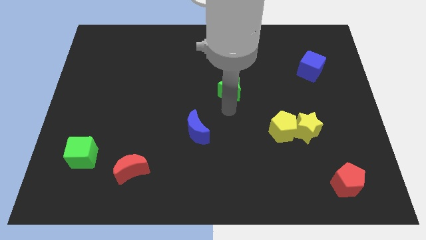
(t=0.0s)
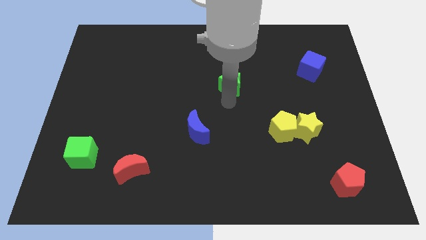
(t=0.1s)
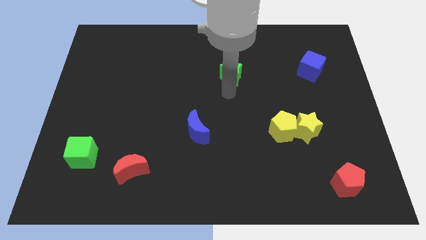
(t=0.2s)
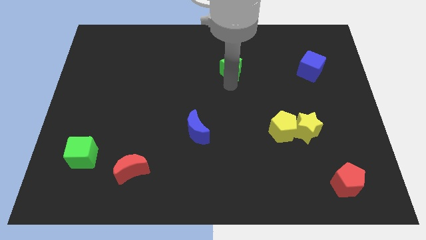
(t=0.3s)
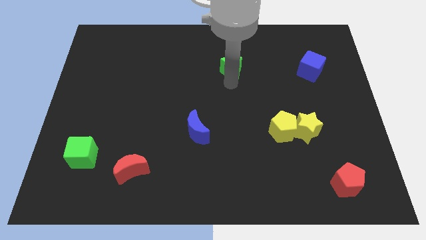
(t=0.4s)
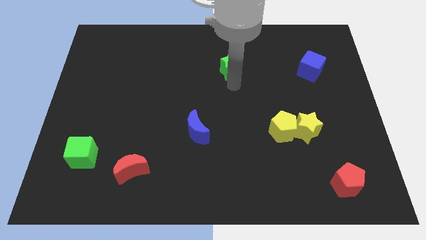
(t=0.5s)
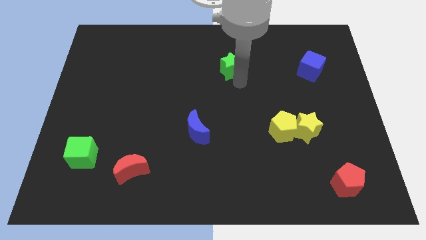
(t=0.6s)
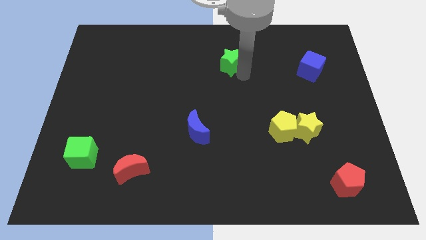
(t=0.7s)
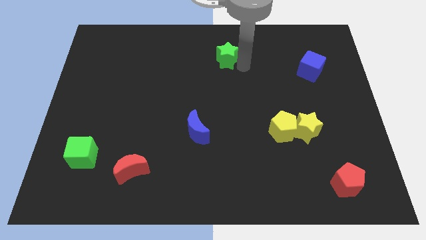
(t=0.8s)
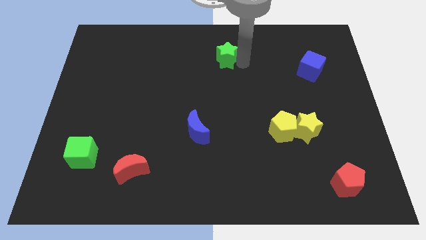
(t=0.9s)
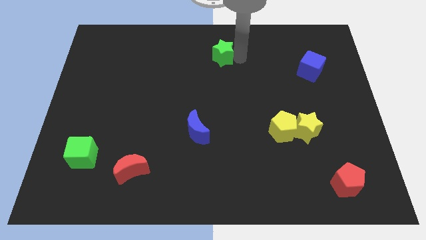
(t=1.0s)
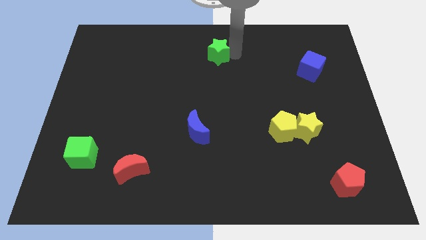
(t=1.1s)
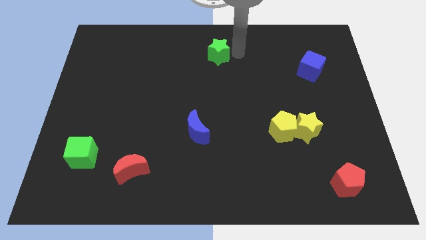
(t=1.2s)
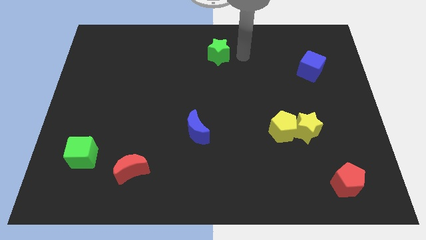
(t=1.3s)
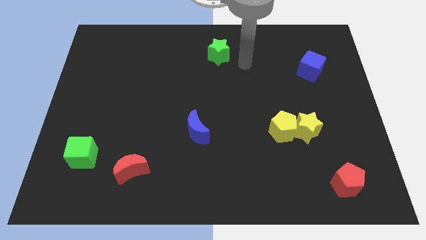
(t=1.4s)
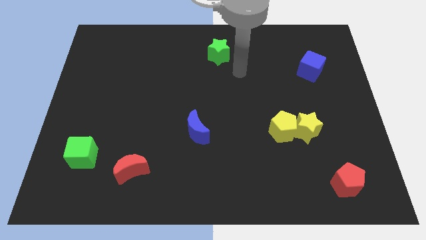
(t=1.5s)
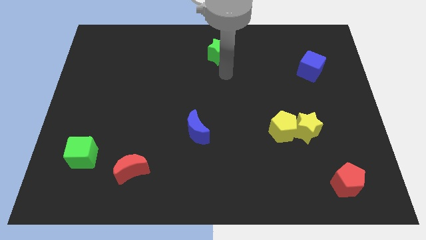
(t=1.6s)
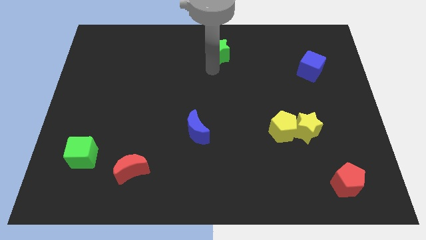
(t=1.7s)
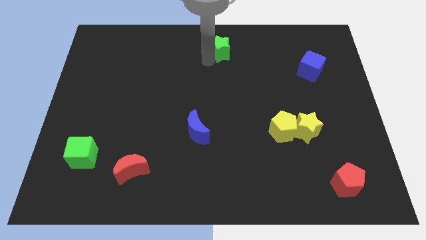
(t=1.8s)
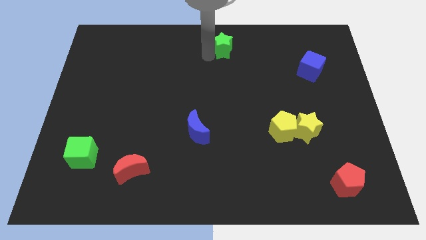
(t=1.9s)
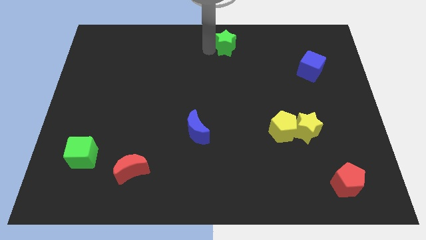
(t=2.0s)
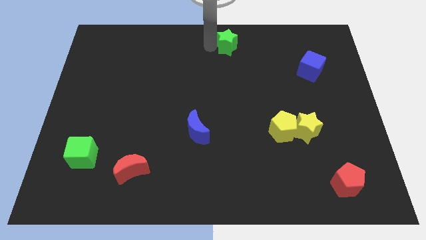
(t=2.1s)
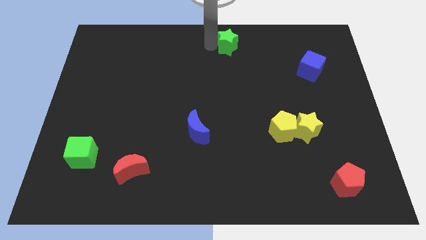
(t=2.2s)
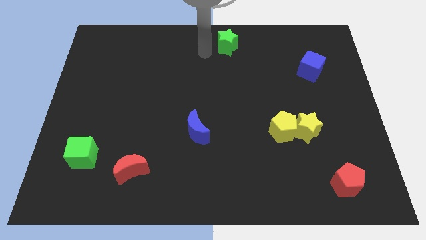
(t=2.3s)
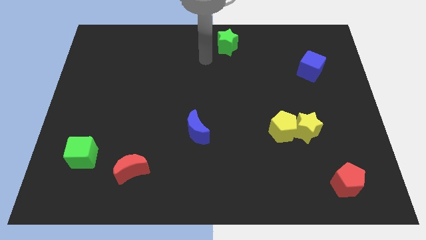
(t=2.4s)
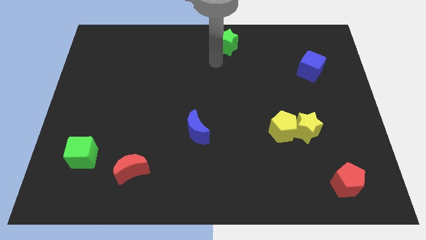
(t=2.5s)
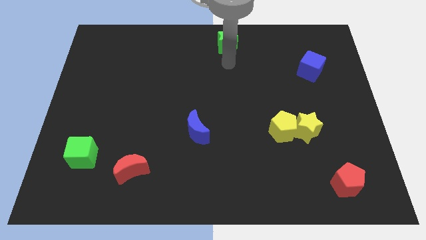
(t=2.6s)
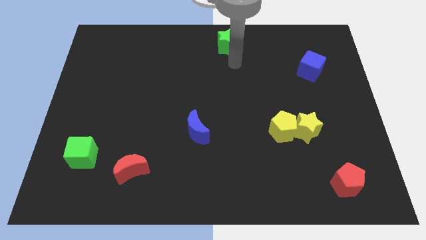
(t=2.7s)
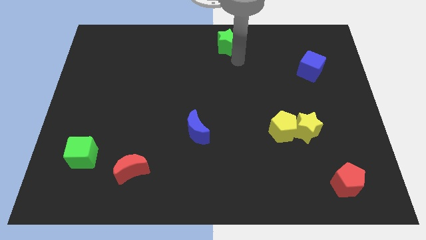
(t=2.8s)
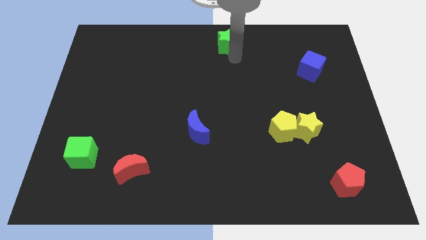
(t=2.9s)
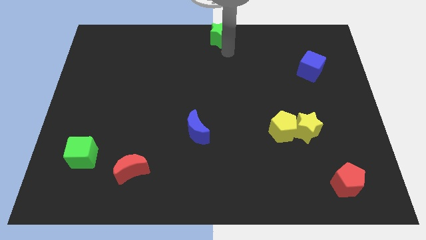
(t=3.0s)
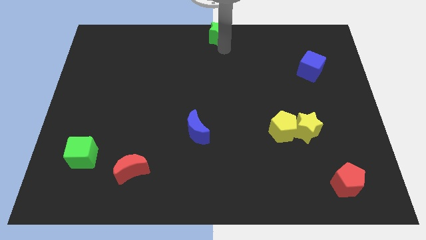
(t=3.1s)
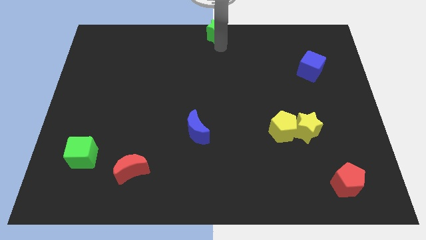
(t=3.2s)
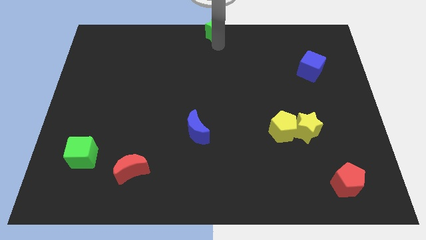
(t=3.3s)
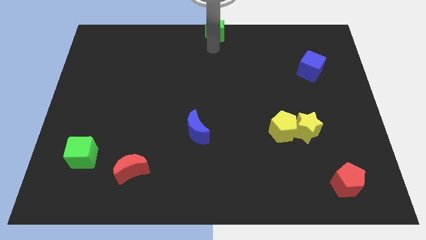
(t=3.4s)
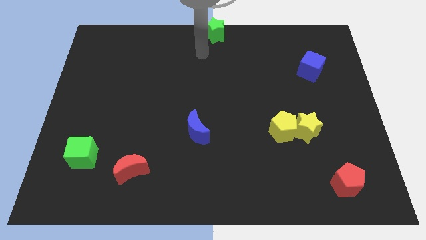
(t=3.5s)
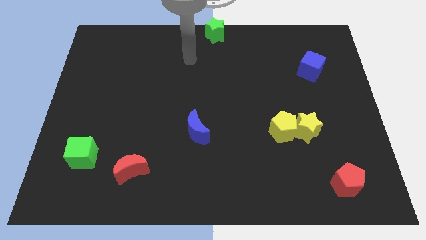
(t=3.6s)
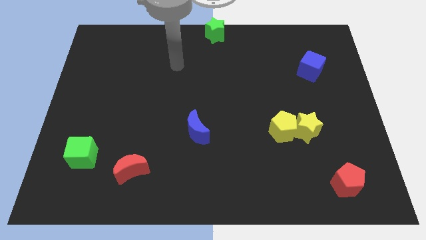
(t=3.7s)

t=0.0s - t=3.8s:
place green star towards top center of the board

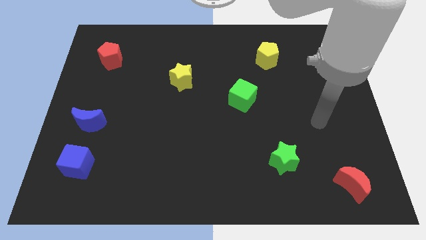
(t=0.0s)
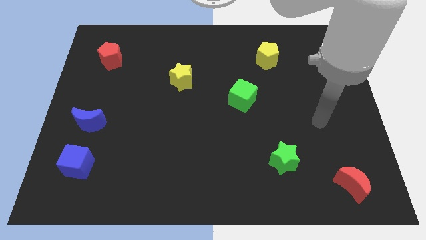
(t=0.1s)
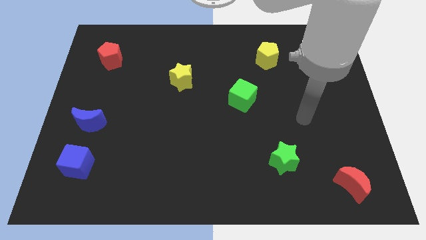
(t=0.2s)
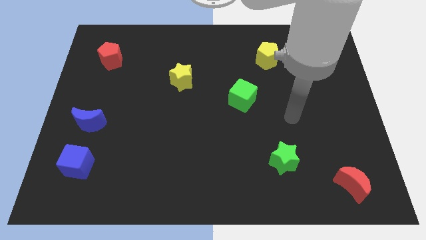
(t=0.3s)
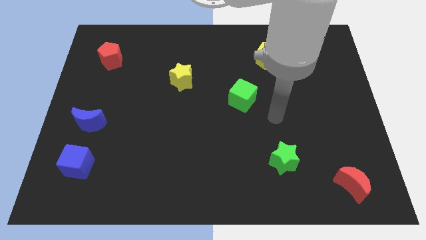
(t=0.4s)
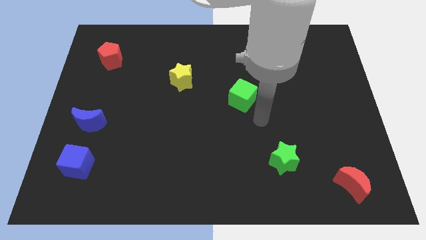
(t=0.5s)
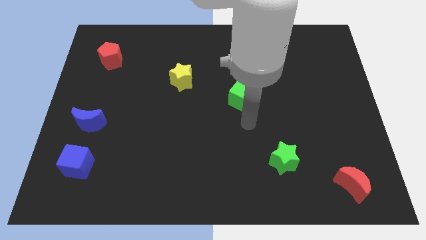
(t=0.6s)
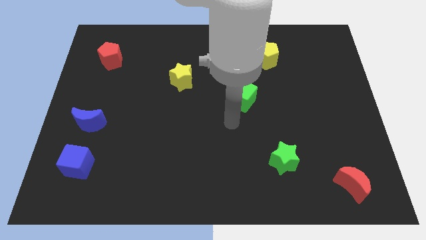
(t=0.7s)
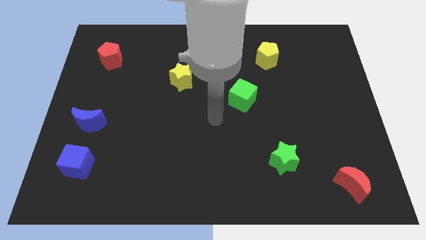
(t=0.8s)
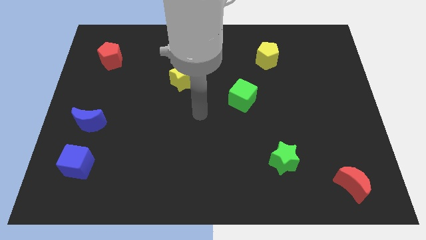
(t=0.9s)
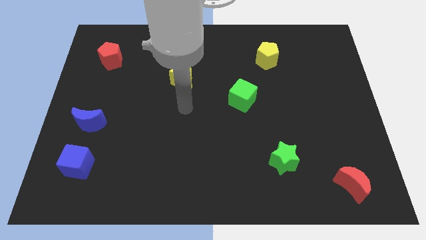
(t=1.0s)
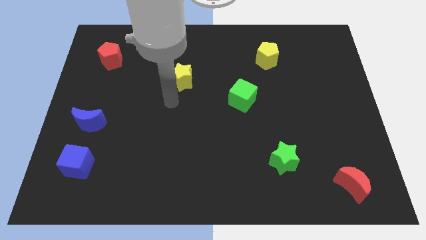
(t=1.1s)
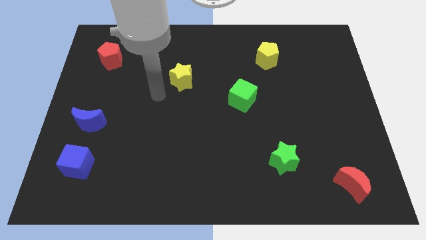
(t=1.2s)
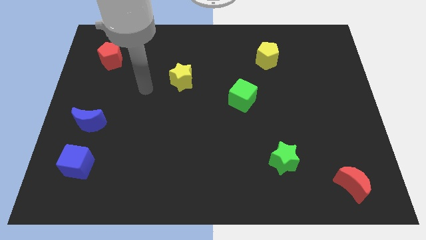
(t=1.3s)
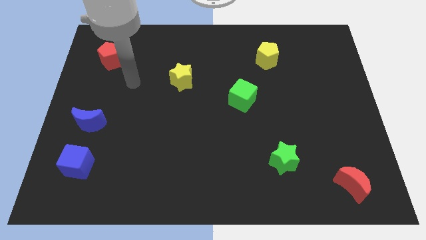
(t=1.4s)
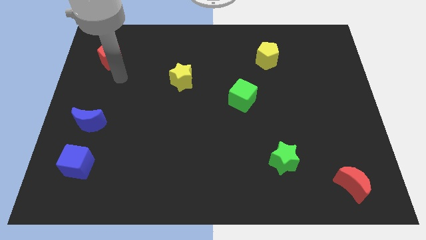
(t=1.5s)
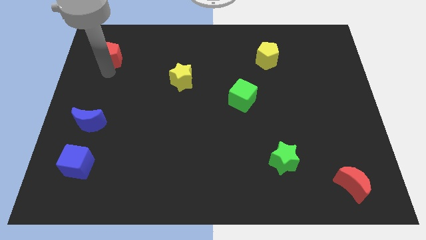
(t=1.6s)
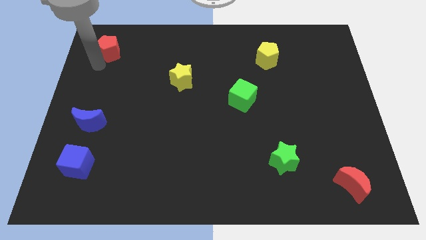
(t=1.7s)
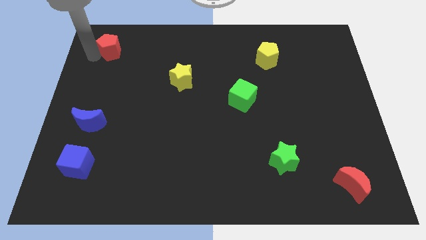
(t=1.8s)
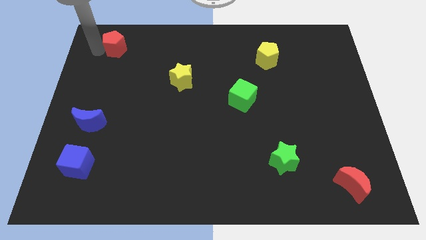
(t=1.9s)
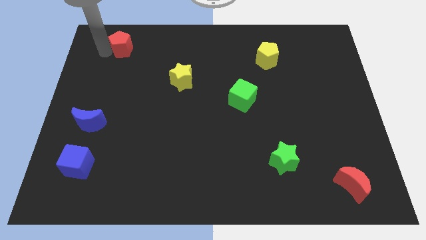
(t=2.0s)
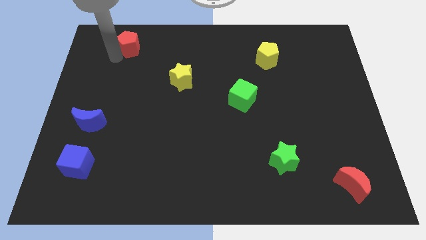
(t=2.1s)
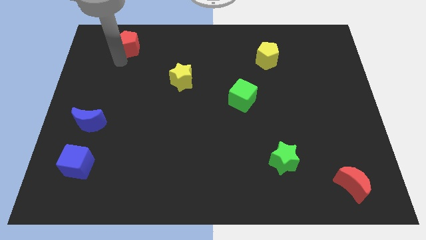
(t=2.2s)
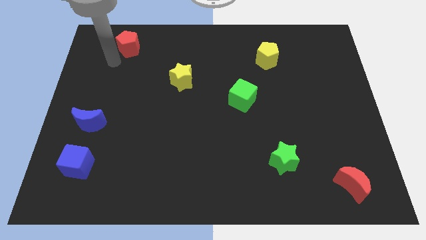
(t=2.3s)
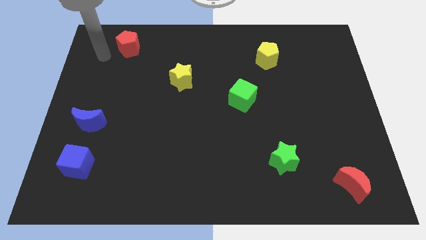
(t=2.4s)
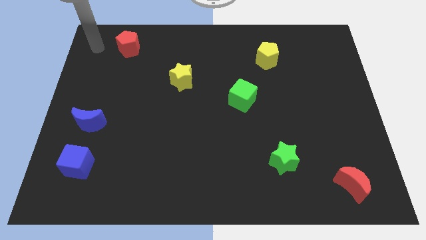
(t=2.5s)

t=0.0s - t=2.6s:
place the red pentagon to the top center of the board

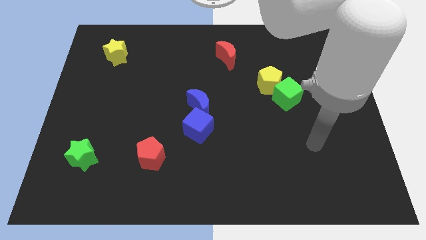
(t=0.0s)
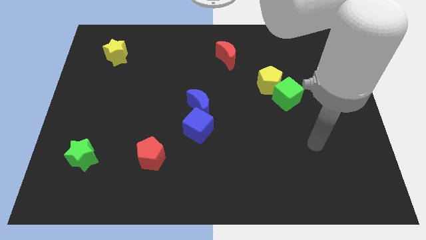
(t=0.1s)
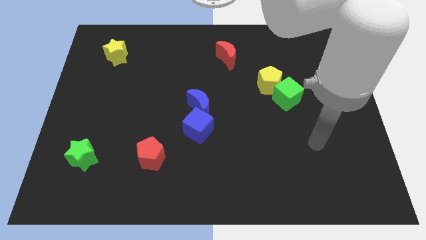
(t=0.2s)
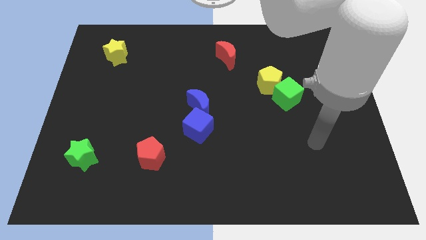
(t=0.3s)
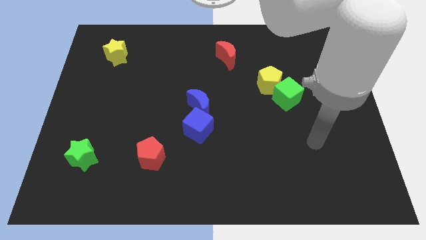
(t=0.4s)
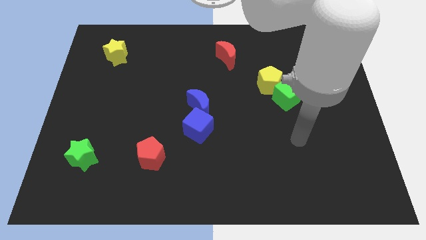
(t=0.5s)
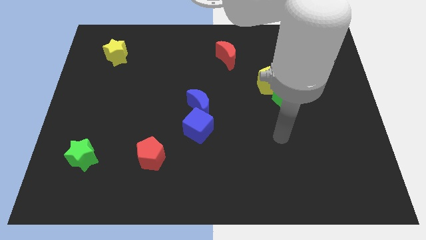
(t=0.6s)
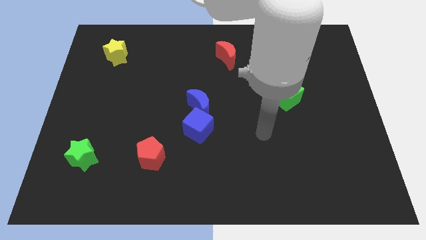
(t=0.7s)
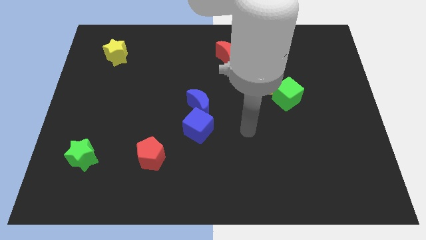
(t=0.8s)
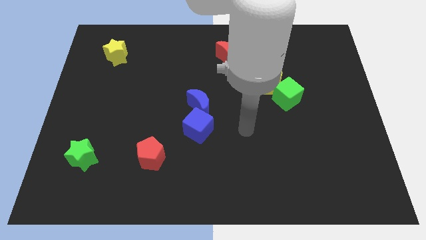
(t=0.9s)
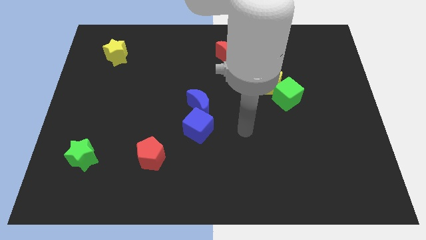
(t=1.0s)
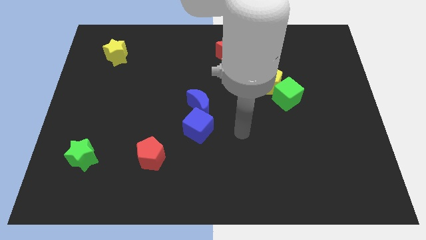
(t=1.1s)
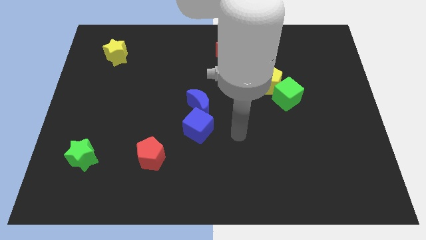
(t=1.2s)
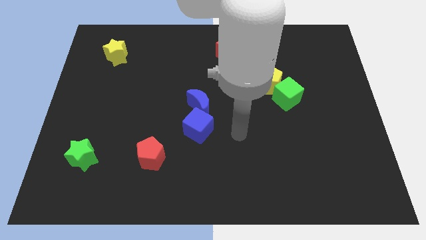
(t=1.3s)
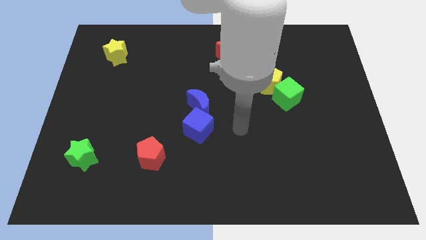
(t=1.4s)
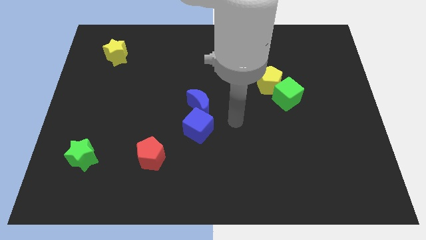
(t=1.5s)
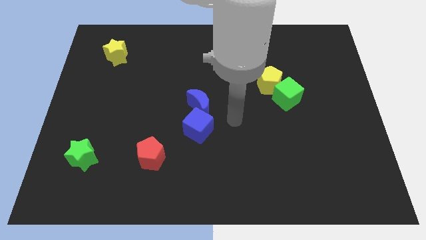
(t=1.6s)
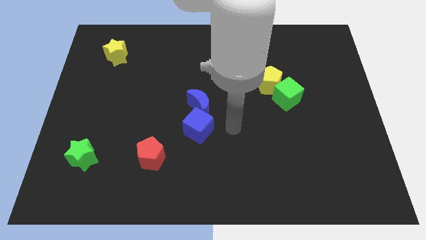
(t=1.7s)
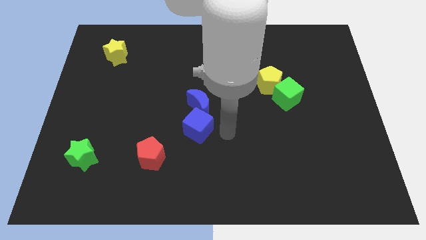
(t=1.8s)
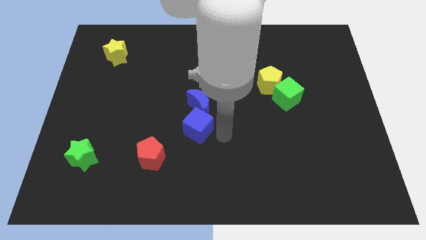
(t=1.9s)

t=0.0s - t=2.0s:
place your arm to the right of the blue cube

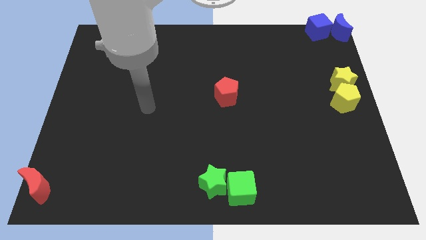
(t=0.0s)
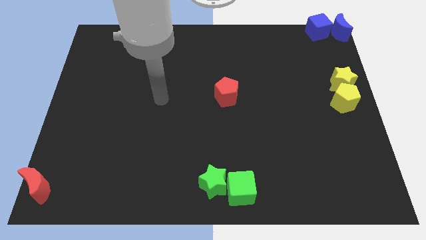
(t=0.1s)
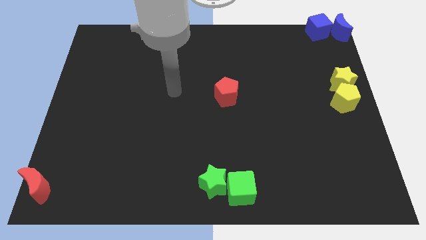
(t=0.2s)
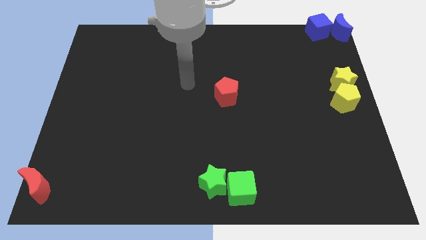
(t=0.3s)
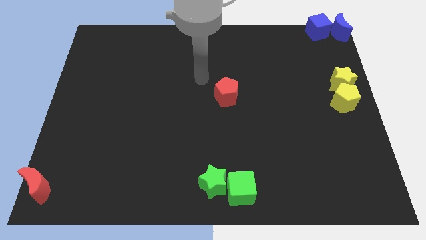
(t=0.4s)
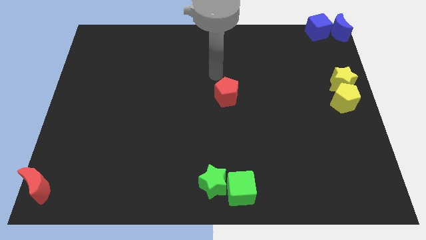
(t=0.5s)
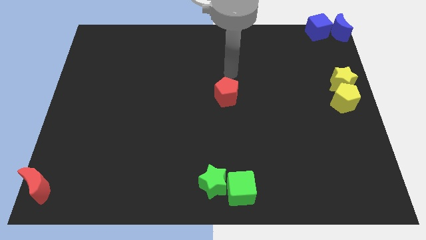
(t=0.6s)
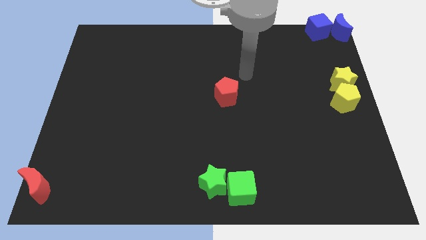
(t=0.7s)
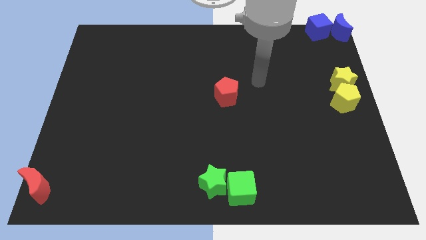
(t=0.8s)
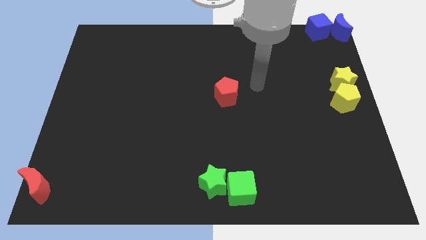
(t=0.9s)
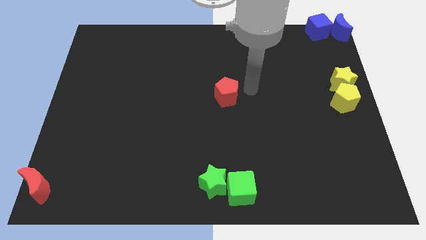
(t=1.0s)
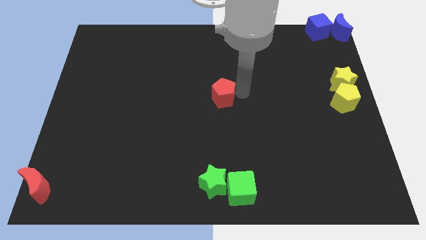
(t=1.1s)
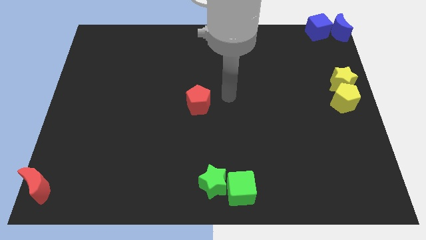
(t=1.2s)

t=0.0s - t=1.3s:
push red pentagon above green star
